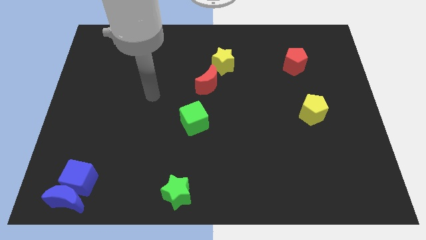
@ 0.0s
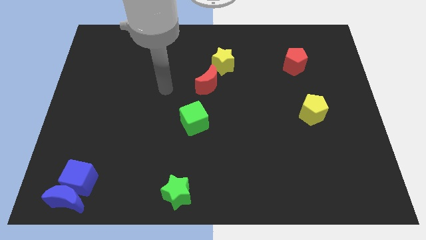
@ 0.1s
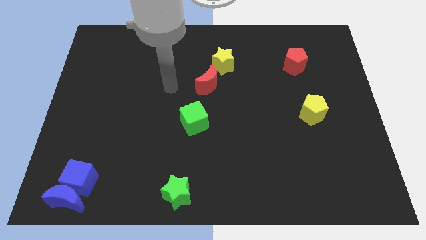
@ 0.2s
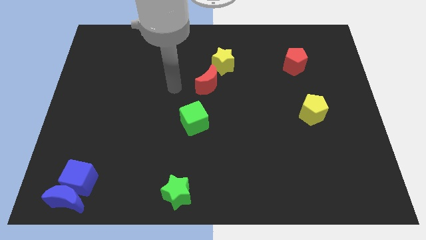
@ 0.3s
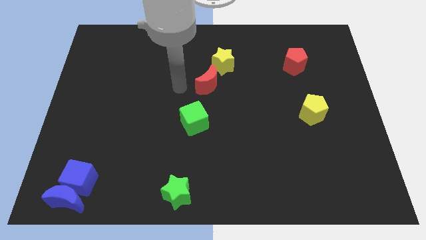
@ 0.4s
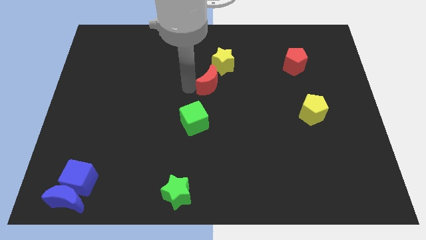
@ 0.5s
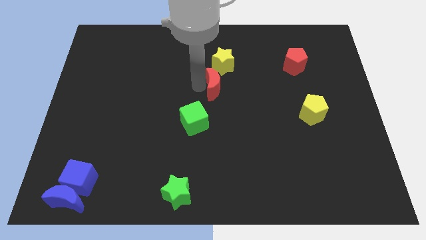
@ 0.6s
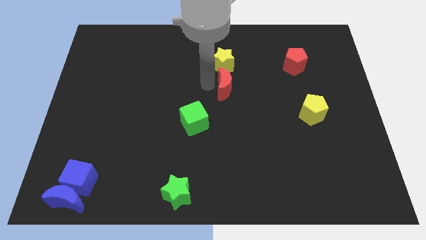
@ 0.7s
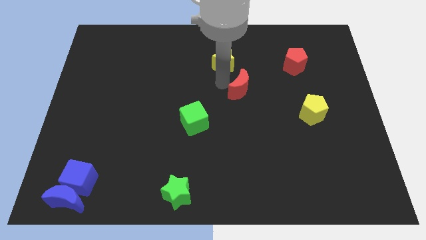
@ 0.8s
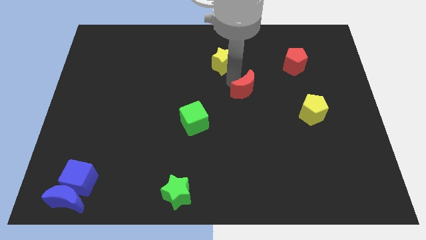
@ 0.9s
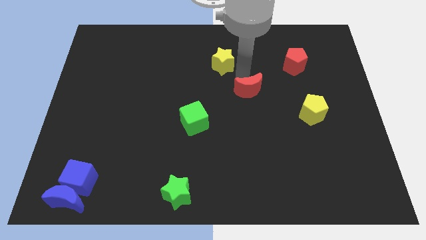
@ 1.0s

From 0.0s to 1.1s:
push the red crescent slightly away from the yellow star

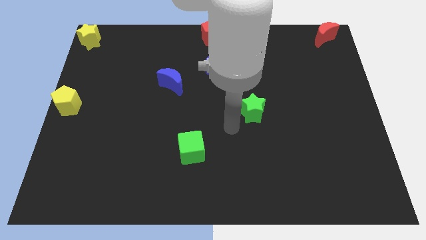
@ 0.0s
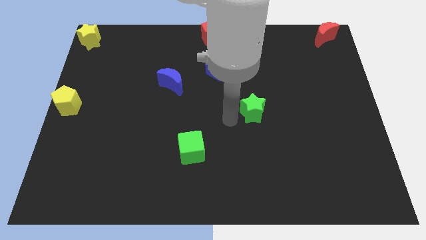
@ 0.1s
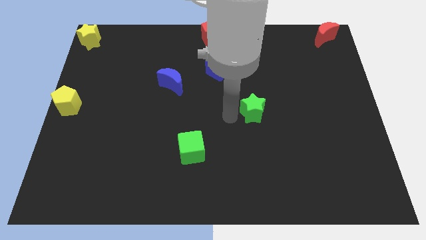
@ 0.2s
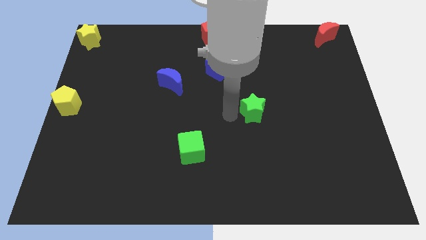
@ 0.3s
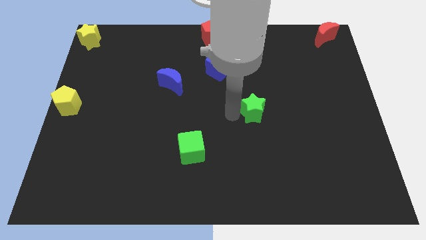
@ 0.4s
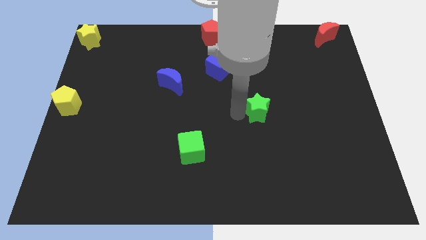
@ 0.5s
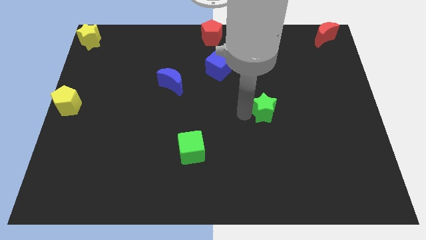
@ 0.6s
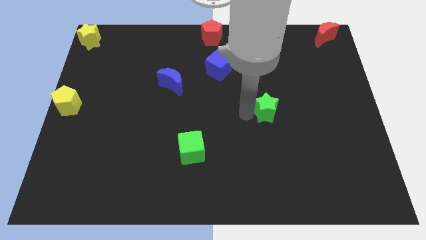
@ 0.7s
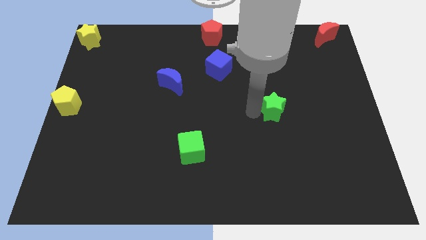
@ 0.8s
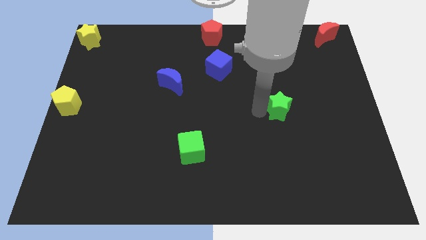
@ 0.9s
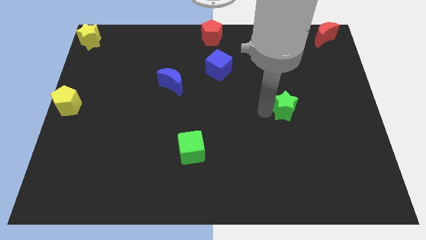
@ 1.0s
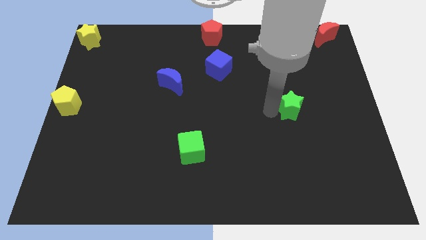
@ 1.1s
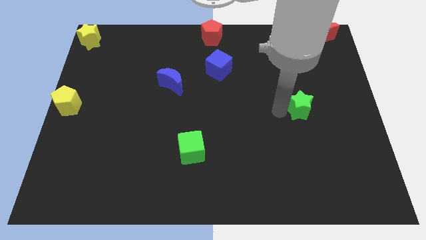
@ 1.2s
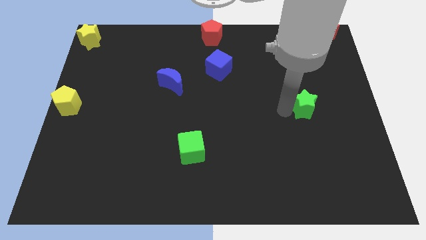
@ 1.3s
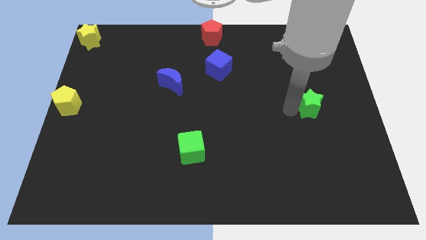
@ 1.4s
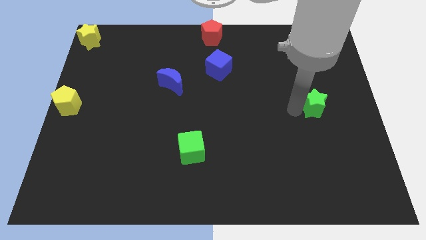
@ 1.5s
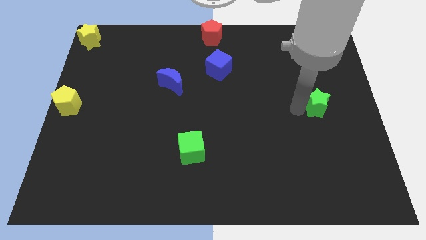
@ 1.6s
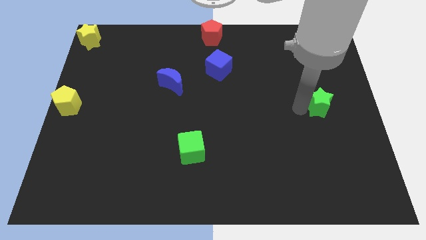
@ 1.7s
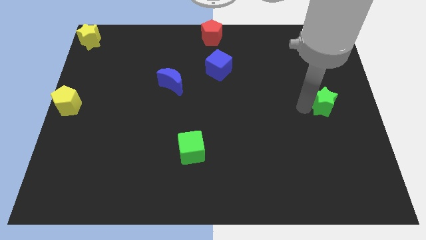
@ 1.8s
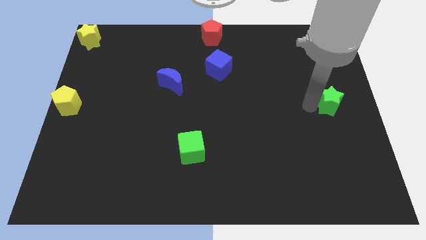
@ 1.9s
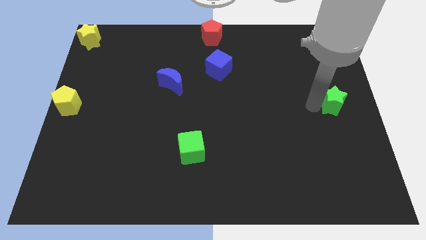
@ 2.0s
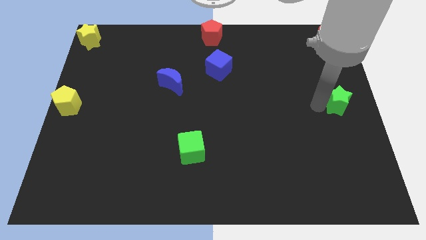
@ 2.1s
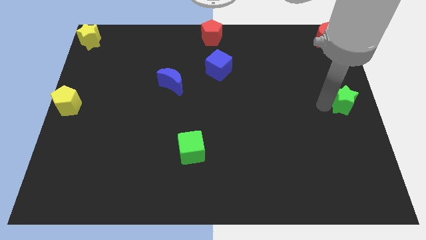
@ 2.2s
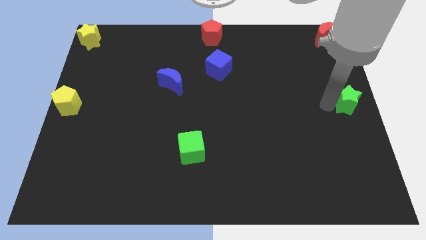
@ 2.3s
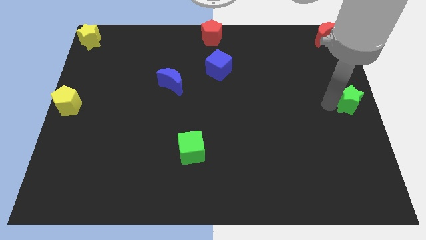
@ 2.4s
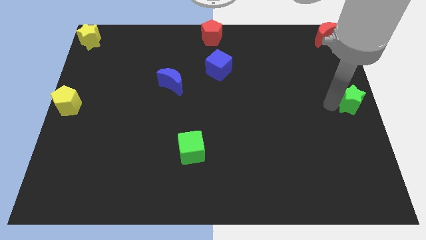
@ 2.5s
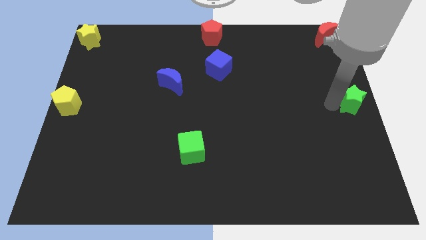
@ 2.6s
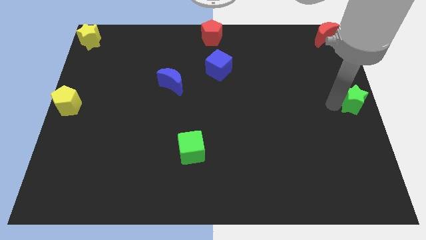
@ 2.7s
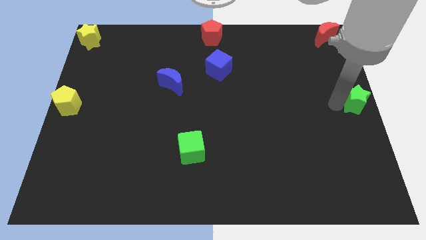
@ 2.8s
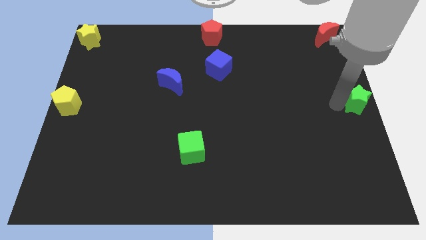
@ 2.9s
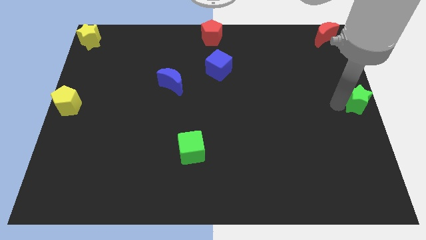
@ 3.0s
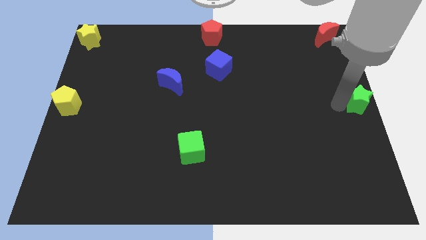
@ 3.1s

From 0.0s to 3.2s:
move the green star on the right center of the board

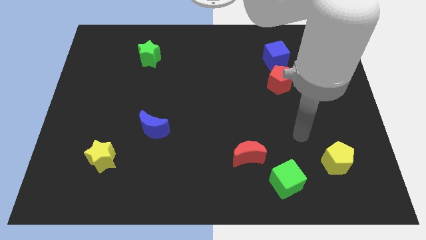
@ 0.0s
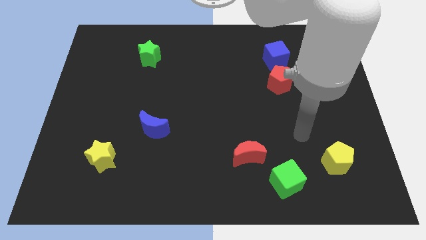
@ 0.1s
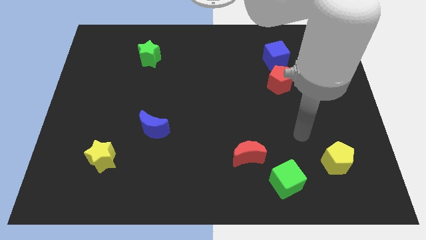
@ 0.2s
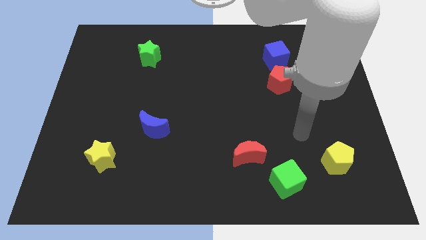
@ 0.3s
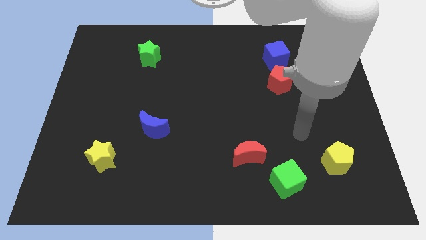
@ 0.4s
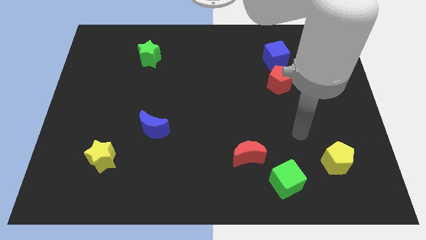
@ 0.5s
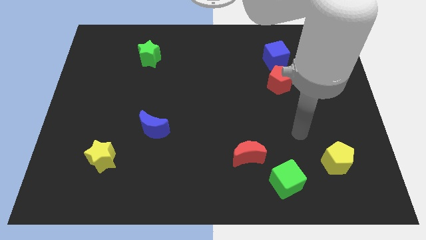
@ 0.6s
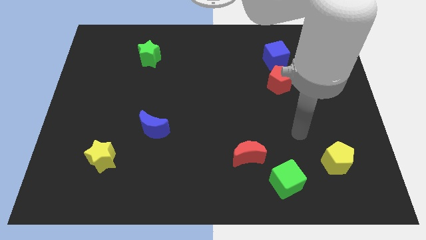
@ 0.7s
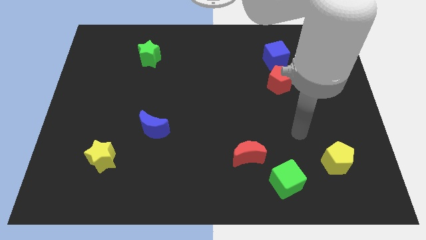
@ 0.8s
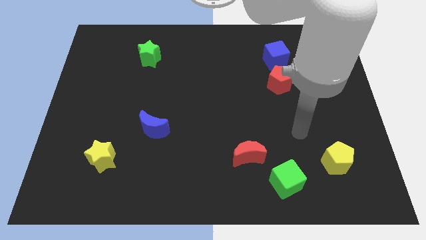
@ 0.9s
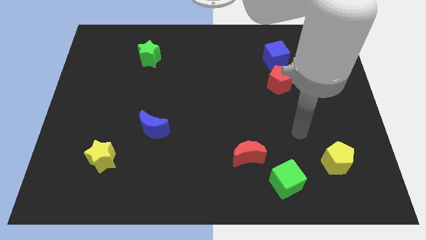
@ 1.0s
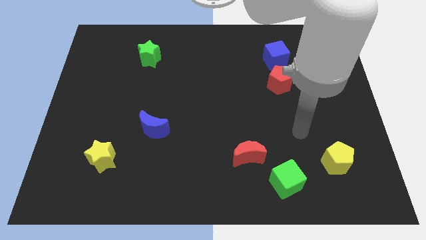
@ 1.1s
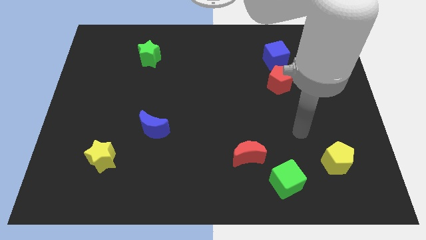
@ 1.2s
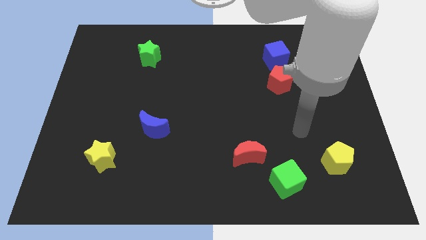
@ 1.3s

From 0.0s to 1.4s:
slightly move the arm in between the yellow pentagon and red pentagon

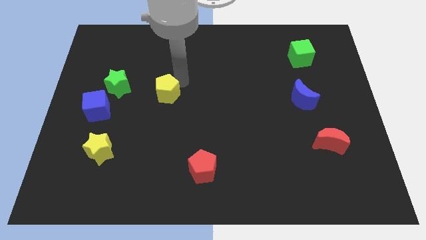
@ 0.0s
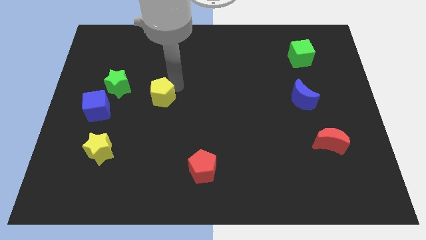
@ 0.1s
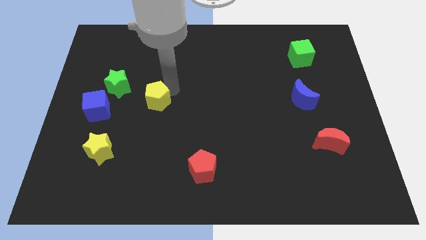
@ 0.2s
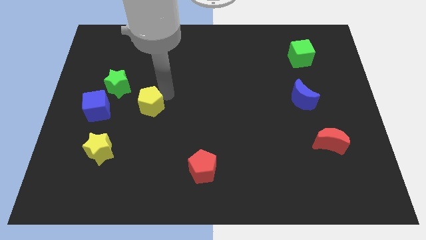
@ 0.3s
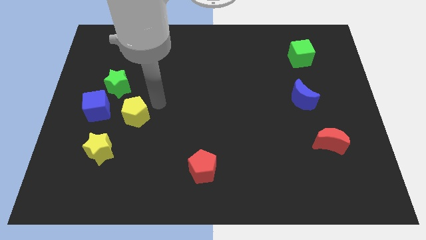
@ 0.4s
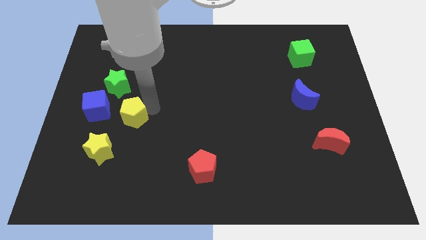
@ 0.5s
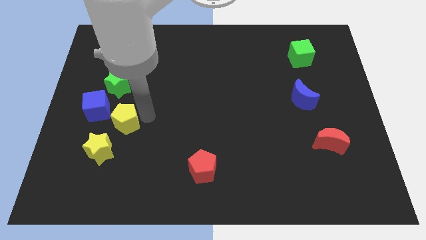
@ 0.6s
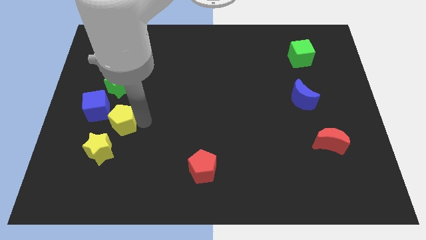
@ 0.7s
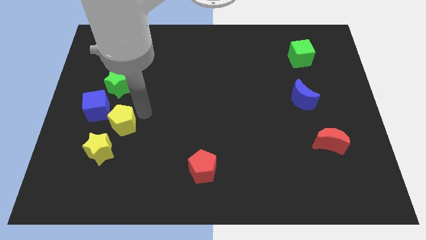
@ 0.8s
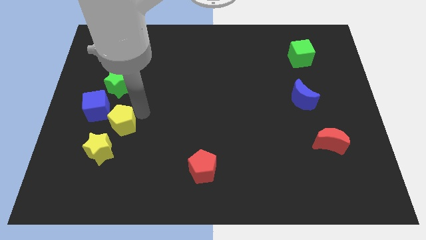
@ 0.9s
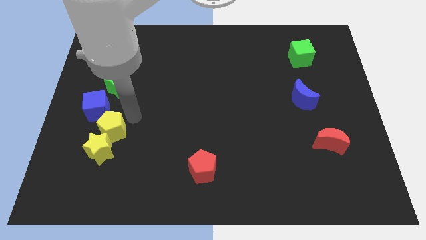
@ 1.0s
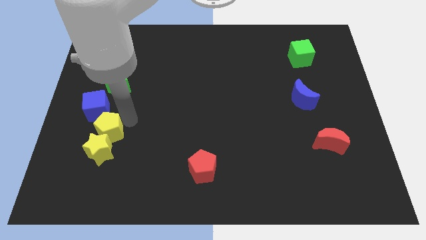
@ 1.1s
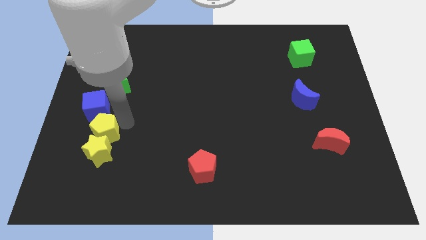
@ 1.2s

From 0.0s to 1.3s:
move the yellow pentagon into the top of the yellow star

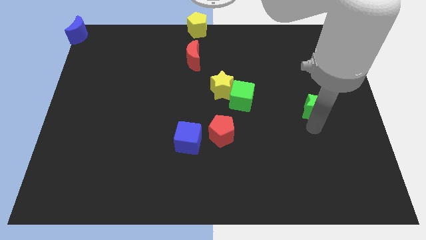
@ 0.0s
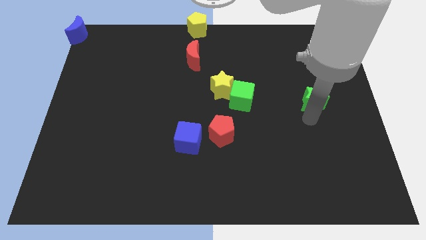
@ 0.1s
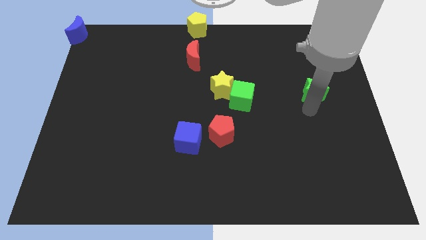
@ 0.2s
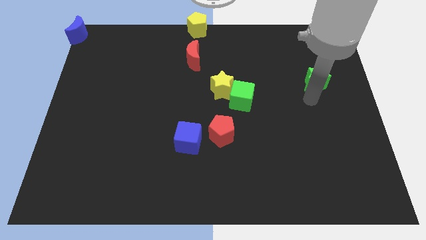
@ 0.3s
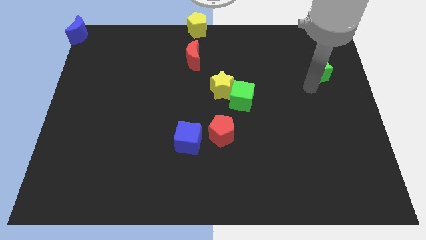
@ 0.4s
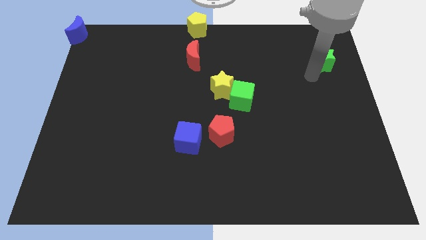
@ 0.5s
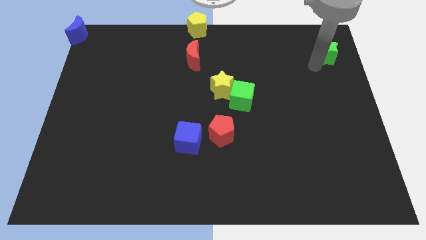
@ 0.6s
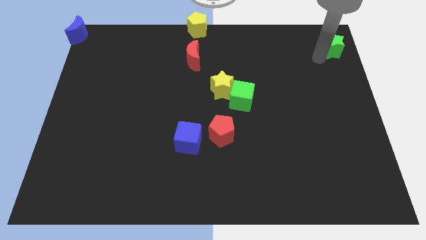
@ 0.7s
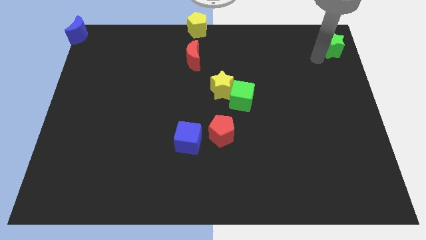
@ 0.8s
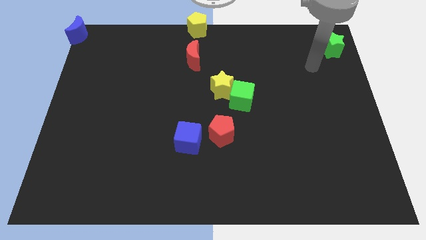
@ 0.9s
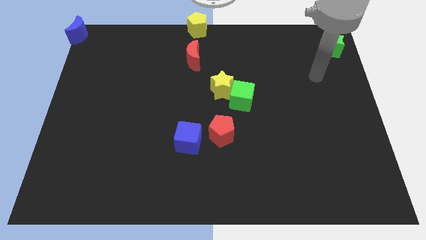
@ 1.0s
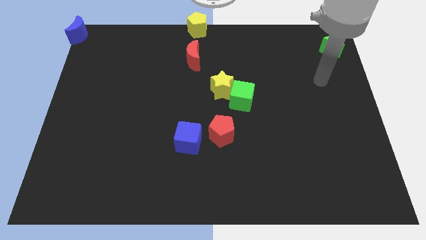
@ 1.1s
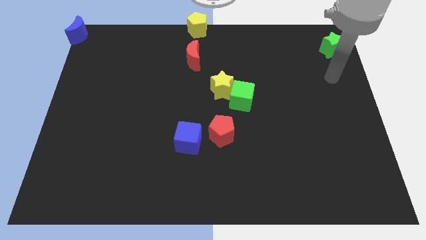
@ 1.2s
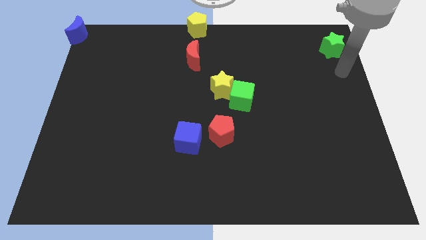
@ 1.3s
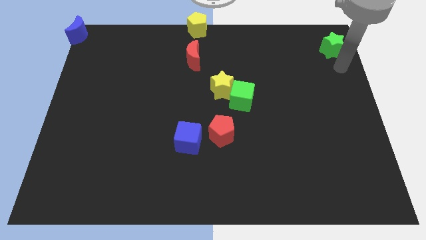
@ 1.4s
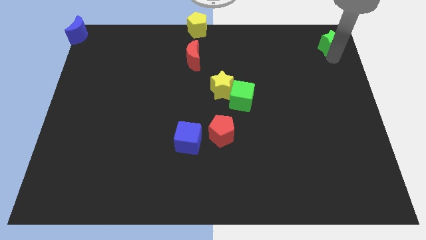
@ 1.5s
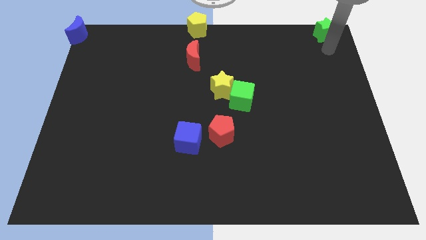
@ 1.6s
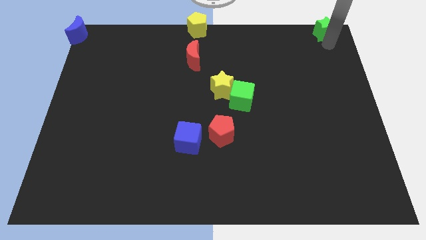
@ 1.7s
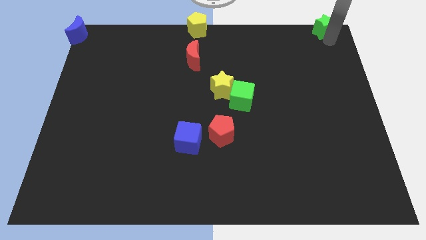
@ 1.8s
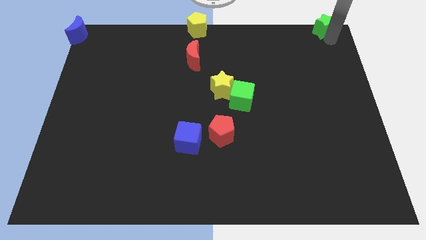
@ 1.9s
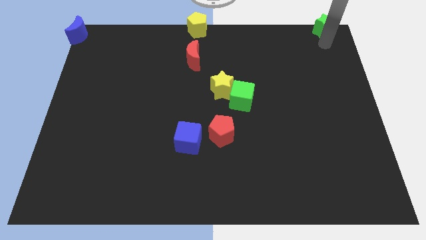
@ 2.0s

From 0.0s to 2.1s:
move the green star to the right of the yellow pentagon
